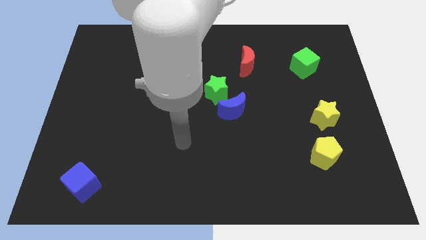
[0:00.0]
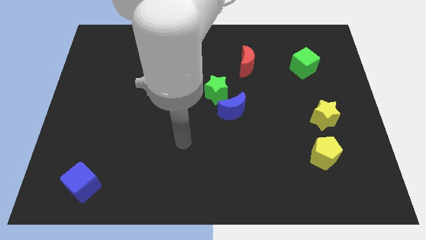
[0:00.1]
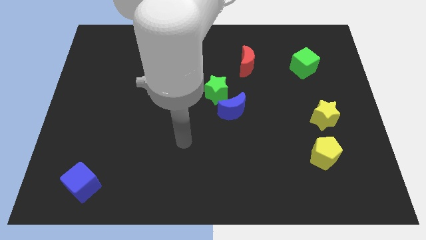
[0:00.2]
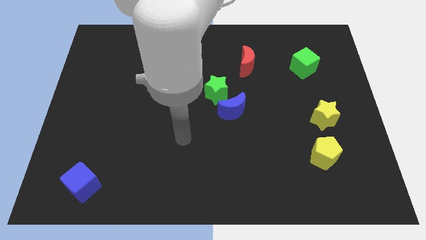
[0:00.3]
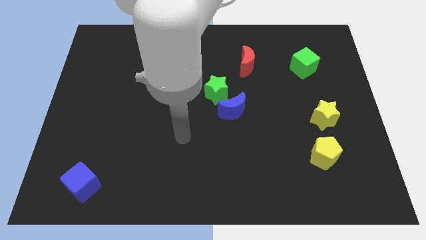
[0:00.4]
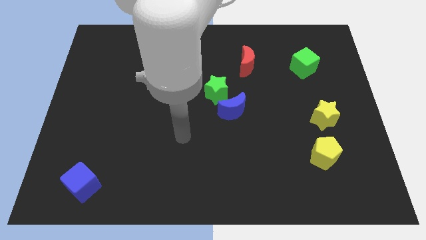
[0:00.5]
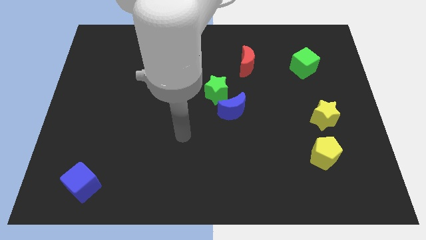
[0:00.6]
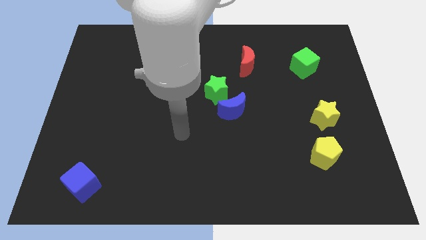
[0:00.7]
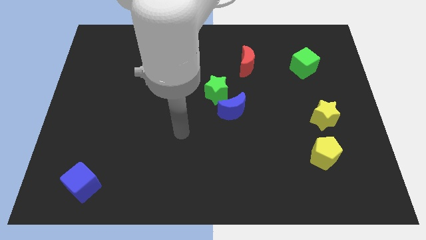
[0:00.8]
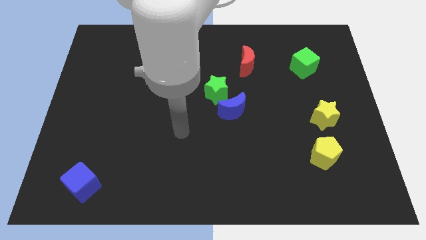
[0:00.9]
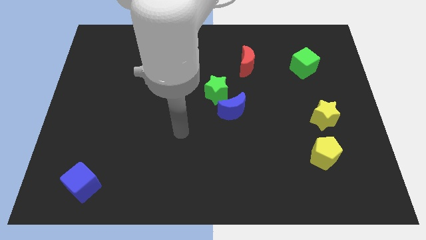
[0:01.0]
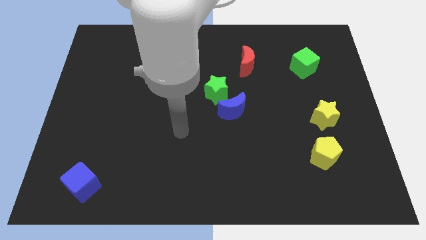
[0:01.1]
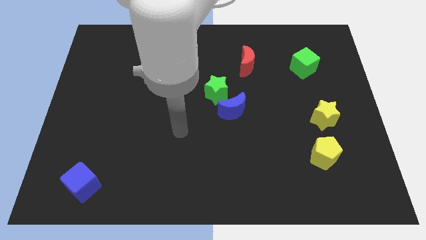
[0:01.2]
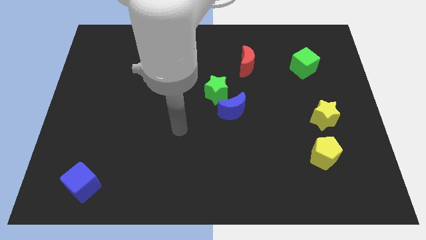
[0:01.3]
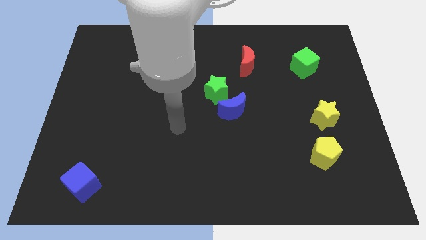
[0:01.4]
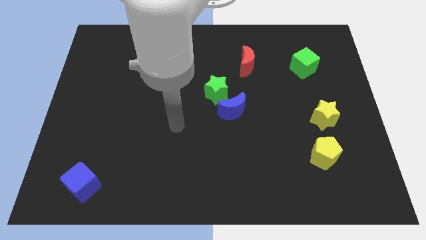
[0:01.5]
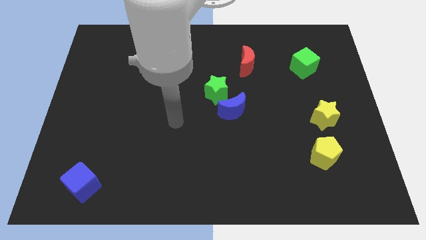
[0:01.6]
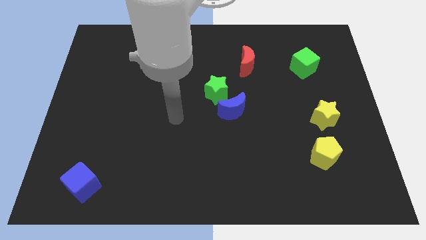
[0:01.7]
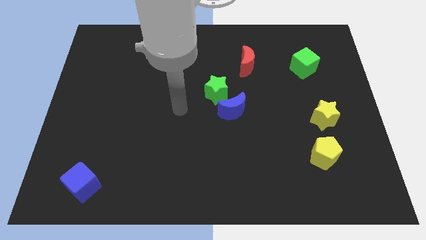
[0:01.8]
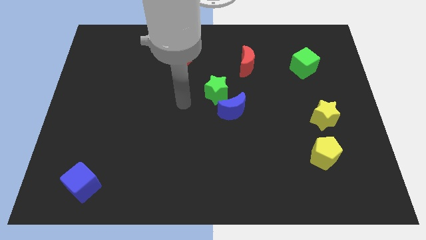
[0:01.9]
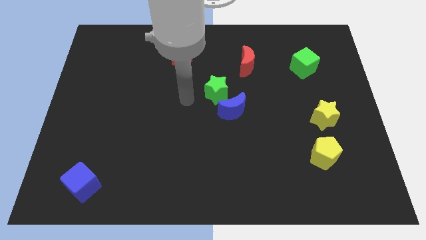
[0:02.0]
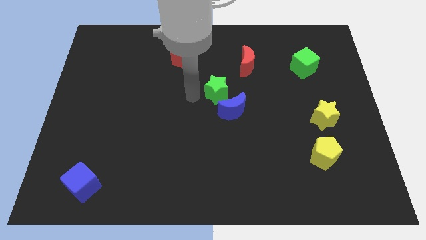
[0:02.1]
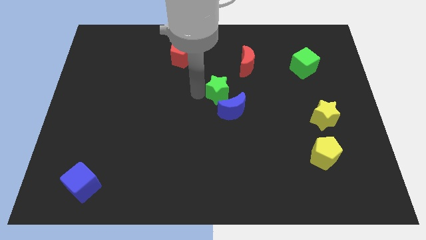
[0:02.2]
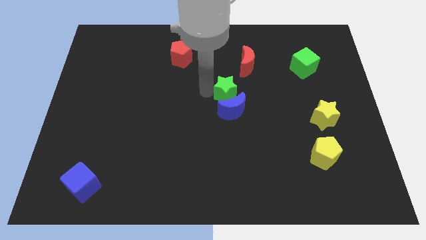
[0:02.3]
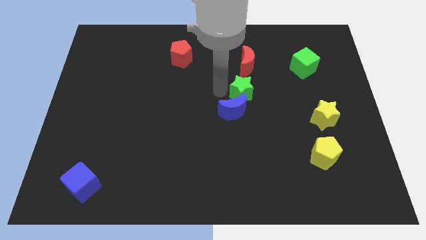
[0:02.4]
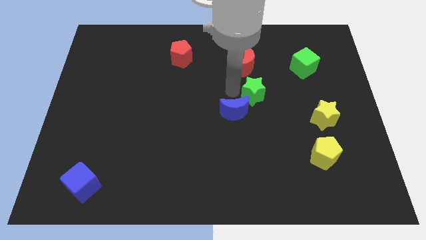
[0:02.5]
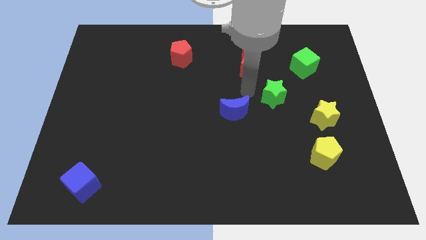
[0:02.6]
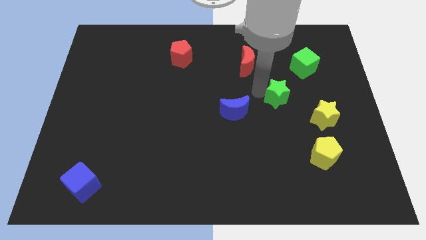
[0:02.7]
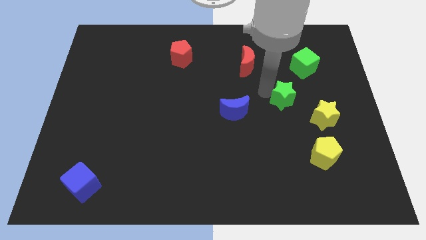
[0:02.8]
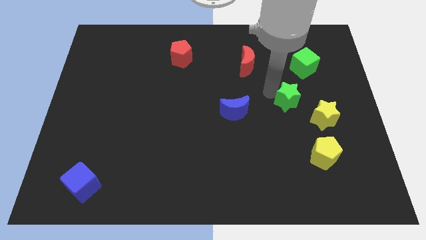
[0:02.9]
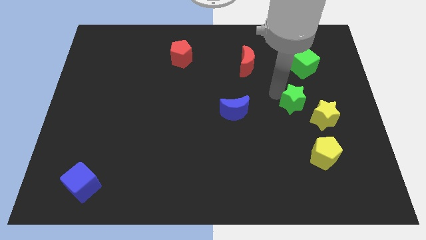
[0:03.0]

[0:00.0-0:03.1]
move the green star diagonal to the yellow star

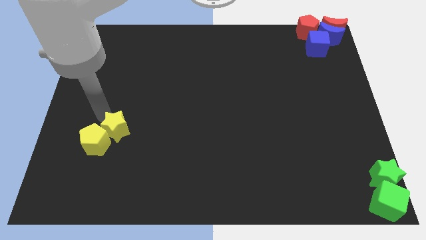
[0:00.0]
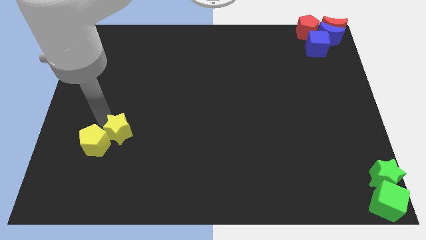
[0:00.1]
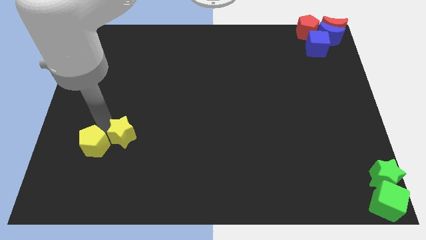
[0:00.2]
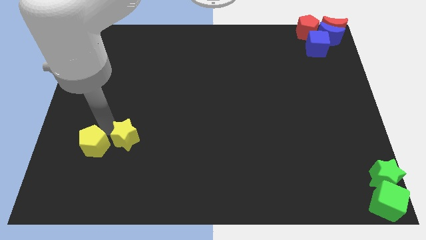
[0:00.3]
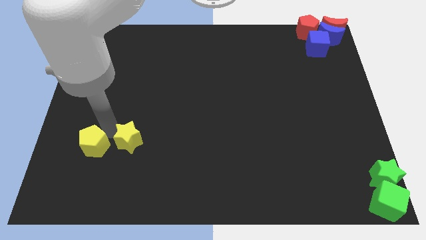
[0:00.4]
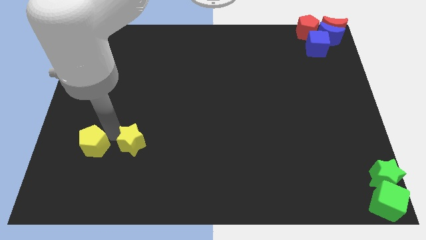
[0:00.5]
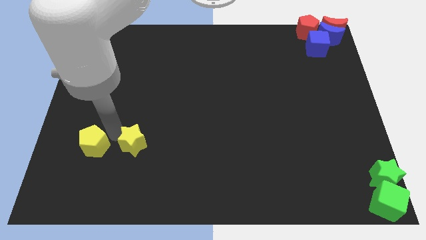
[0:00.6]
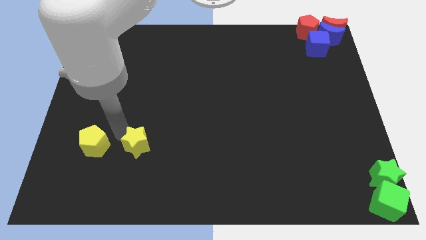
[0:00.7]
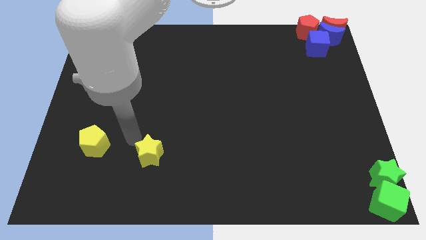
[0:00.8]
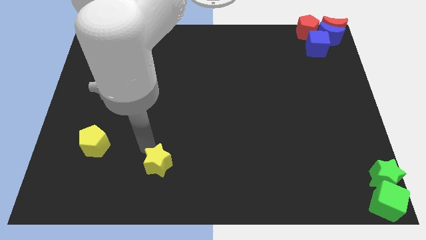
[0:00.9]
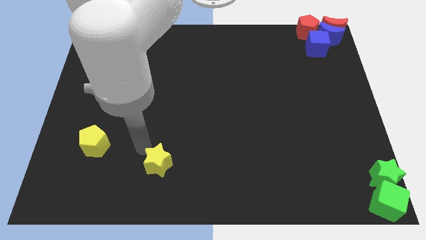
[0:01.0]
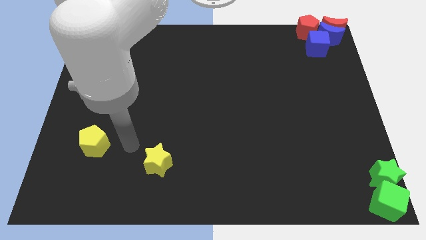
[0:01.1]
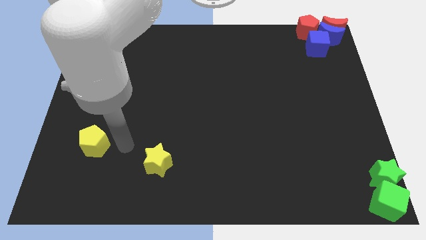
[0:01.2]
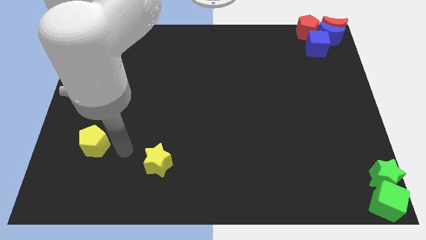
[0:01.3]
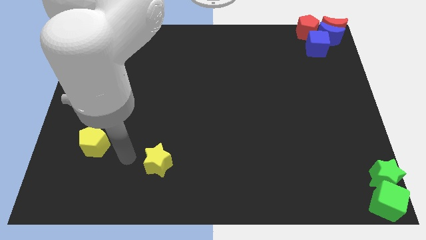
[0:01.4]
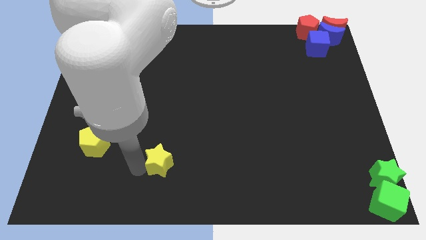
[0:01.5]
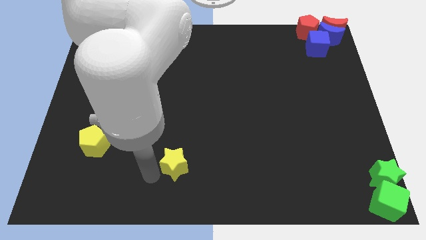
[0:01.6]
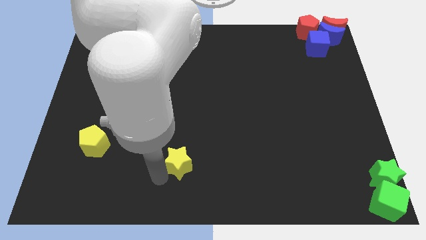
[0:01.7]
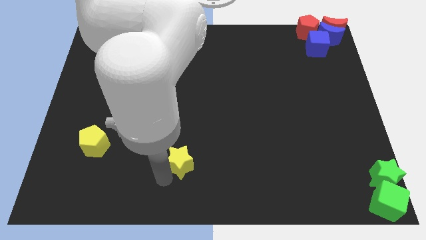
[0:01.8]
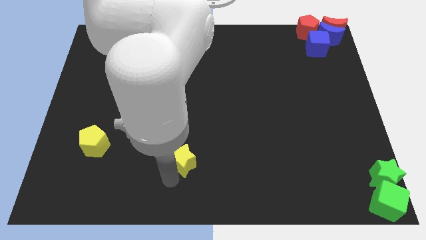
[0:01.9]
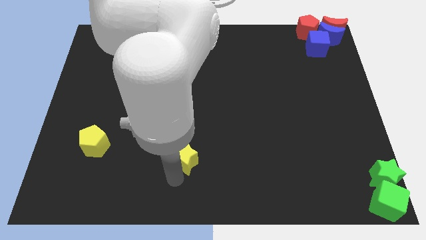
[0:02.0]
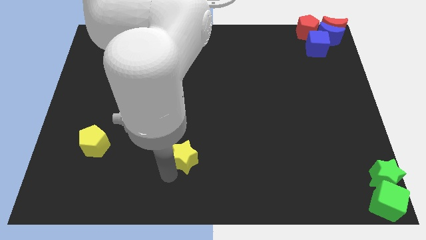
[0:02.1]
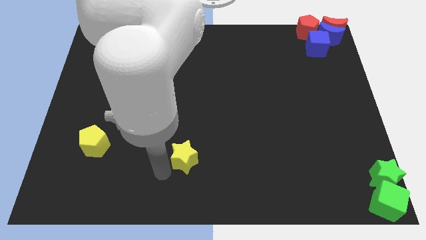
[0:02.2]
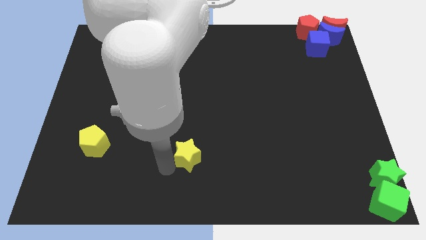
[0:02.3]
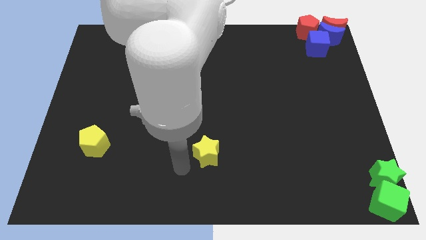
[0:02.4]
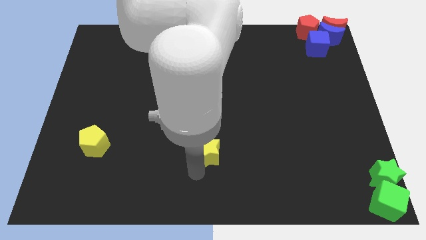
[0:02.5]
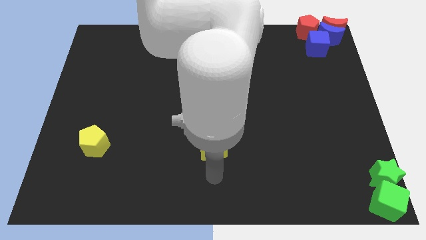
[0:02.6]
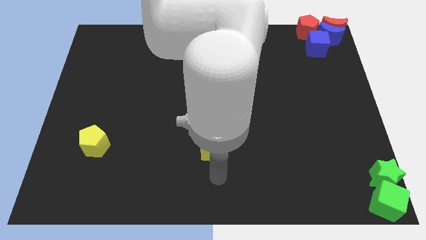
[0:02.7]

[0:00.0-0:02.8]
separate the yellow star from the yellow pentagon

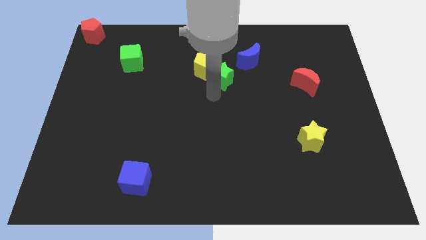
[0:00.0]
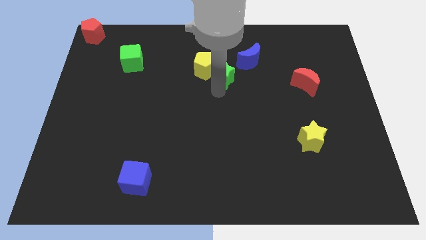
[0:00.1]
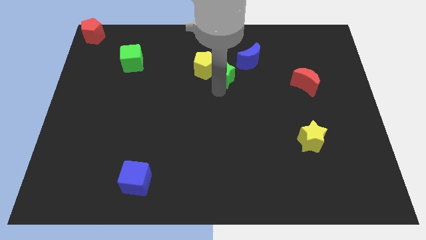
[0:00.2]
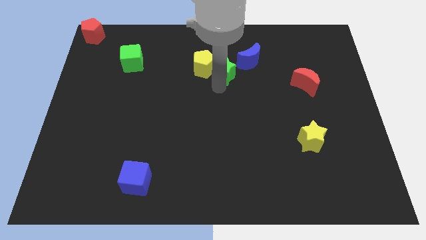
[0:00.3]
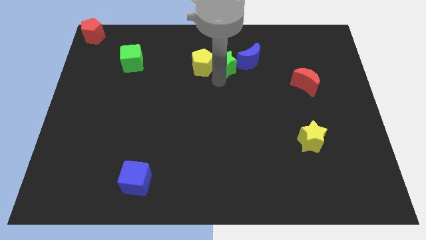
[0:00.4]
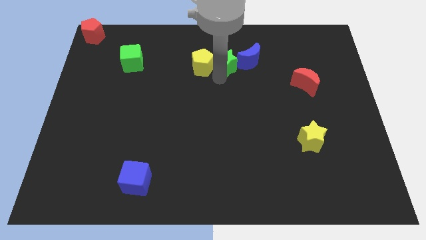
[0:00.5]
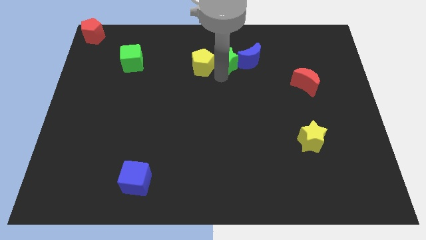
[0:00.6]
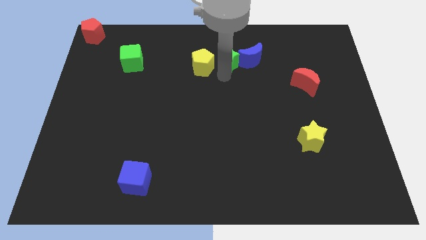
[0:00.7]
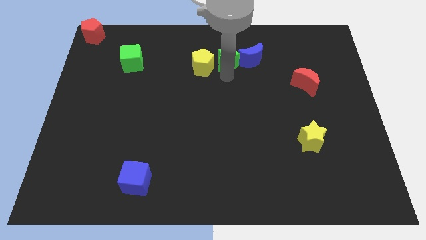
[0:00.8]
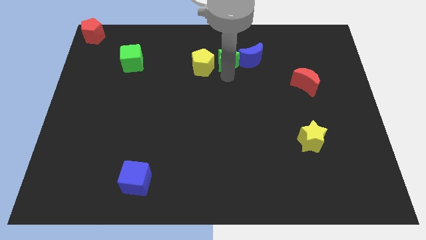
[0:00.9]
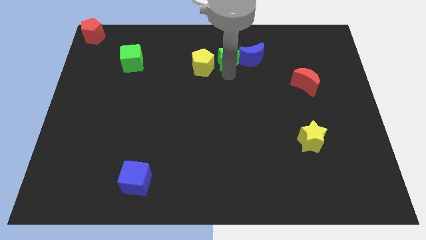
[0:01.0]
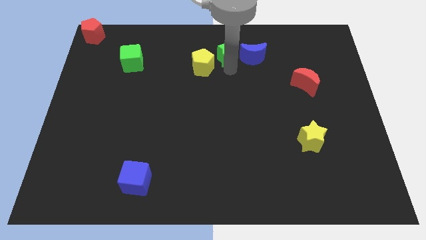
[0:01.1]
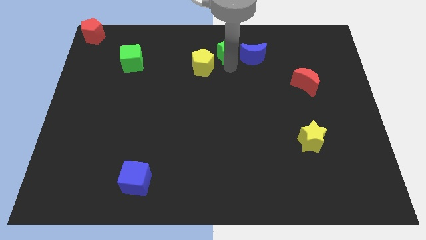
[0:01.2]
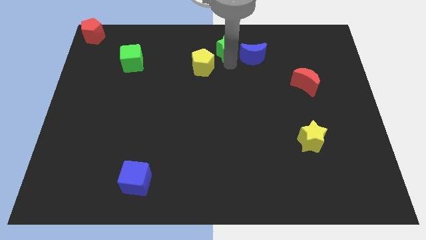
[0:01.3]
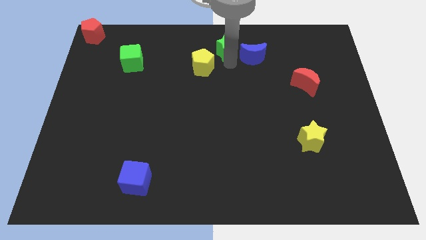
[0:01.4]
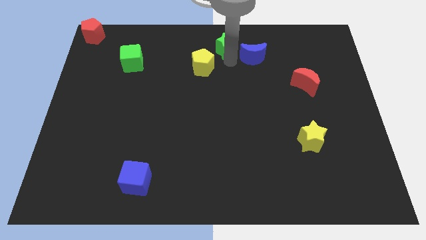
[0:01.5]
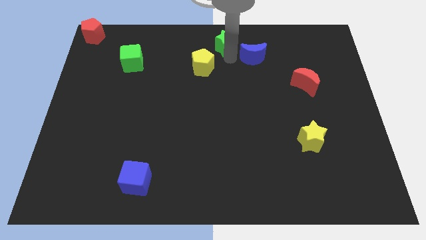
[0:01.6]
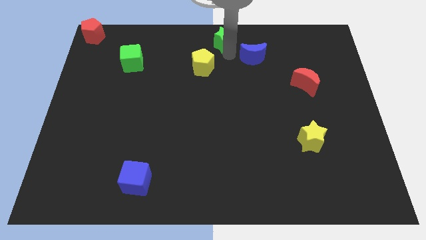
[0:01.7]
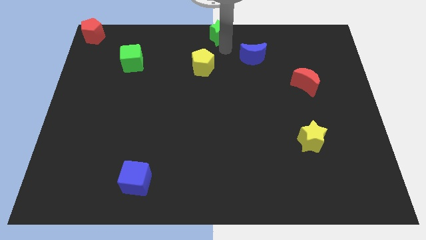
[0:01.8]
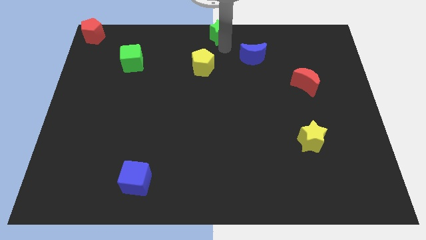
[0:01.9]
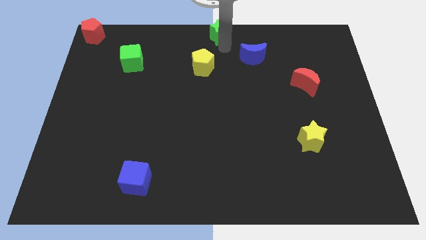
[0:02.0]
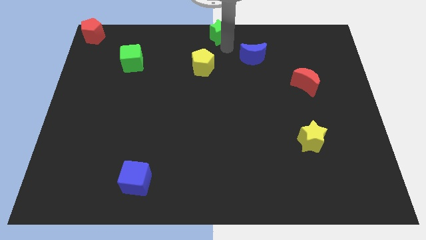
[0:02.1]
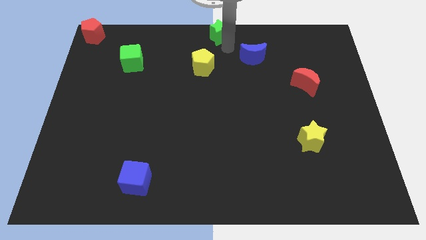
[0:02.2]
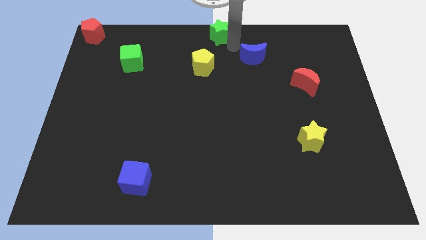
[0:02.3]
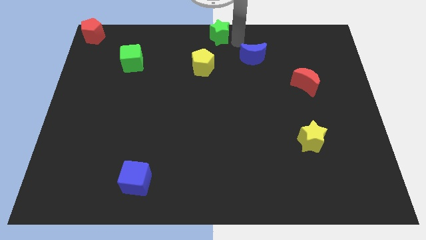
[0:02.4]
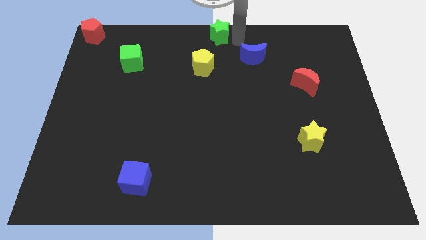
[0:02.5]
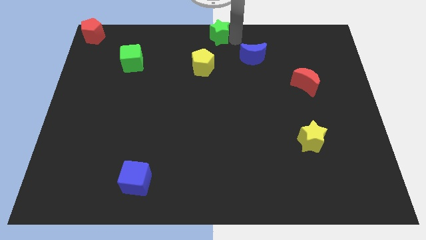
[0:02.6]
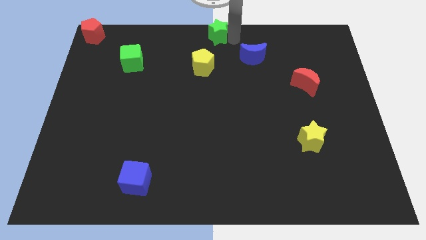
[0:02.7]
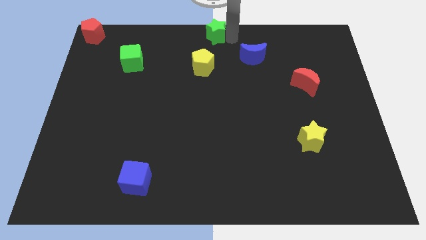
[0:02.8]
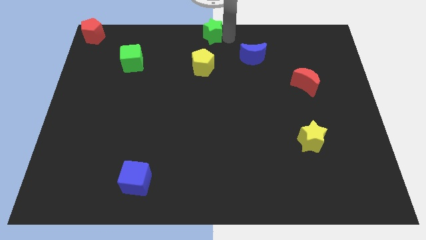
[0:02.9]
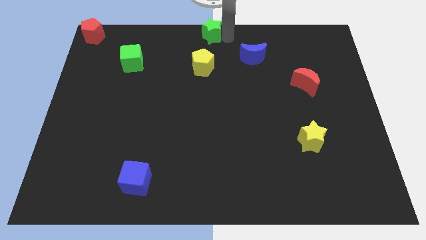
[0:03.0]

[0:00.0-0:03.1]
move the green star to the top center of the board
